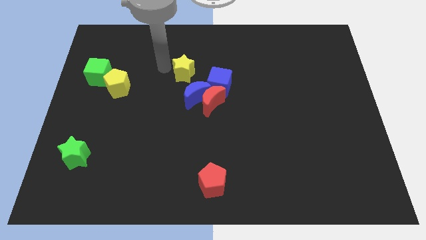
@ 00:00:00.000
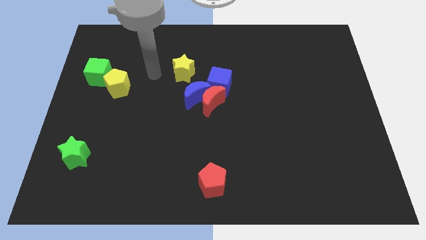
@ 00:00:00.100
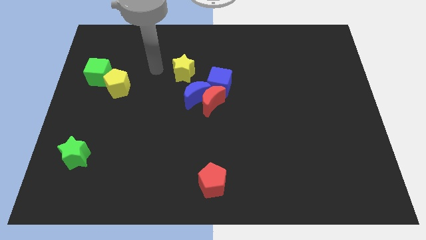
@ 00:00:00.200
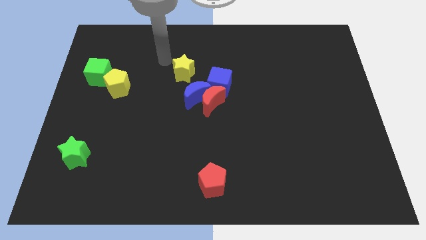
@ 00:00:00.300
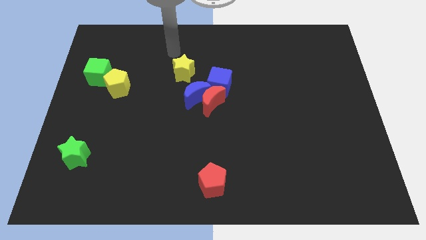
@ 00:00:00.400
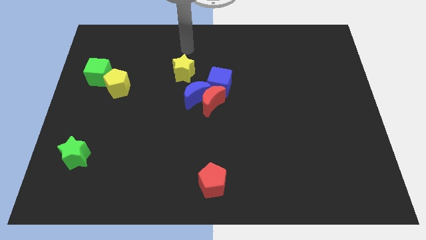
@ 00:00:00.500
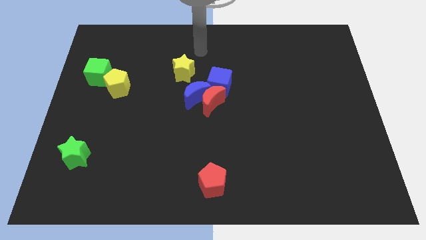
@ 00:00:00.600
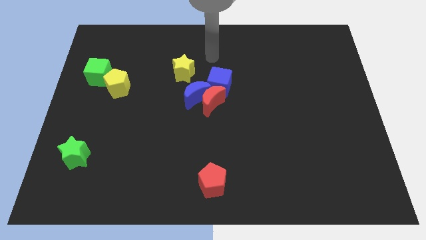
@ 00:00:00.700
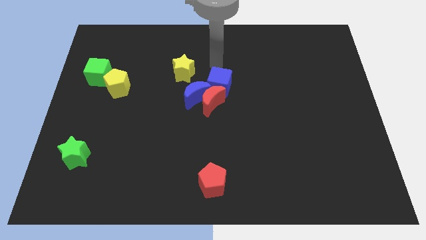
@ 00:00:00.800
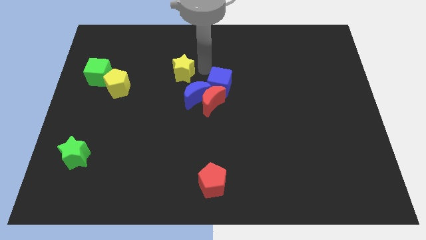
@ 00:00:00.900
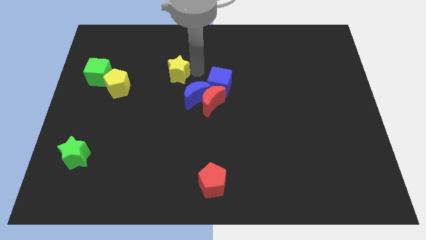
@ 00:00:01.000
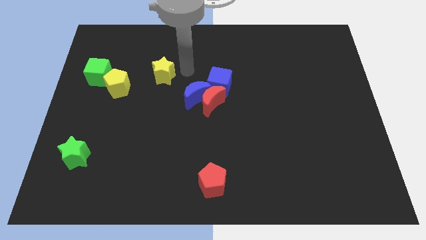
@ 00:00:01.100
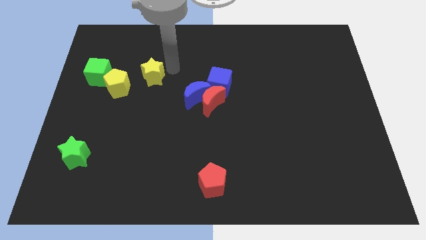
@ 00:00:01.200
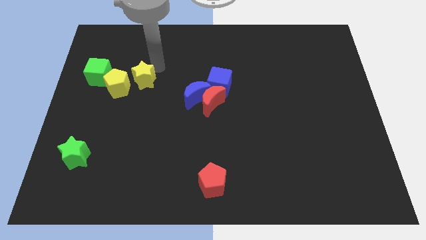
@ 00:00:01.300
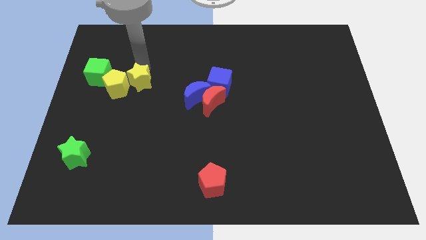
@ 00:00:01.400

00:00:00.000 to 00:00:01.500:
push yellow star into yellow pentagon

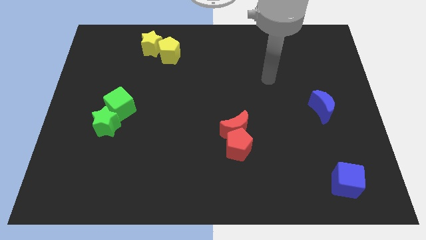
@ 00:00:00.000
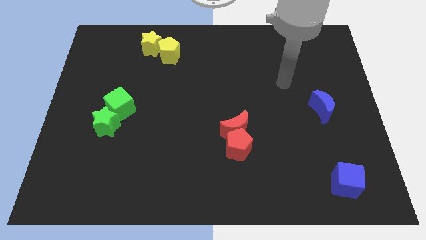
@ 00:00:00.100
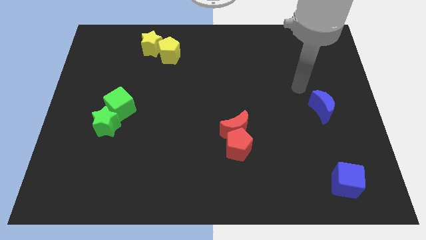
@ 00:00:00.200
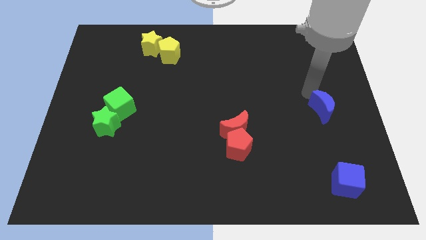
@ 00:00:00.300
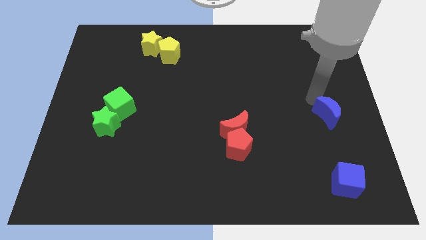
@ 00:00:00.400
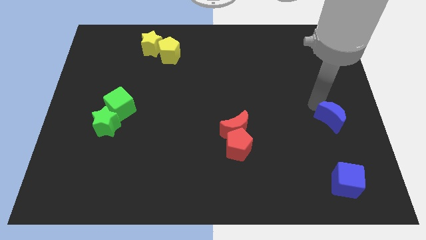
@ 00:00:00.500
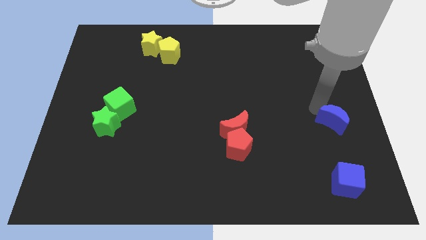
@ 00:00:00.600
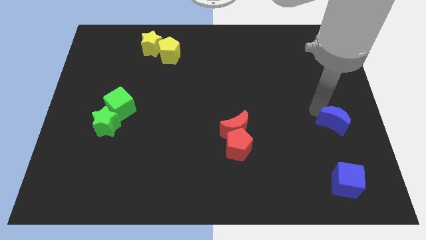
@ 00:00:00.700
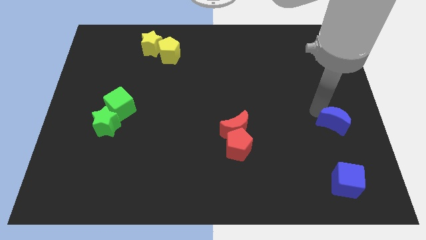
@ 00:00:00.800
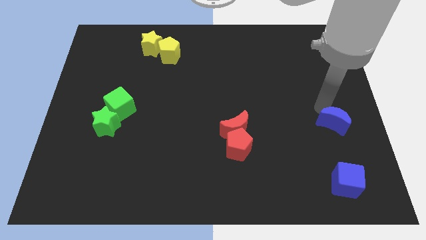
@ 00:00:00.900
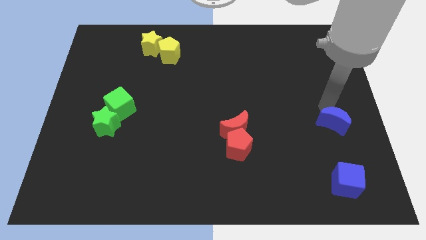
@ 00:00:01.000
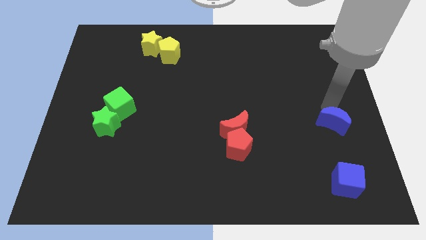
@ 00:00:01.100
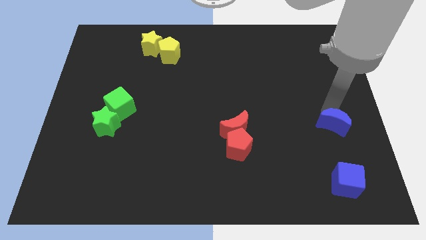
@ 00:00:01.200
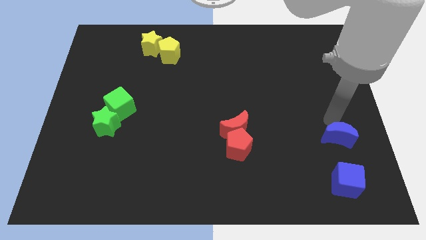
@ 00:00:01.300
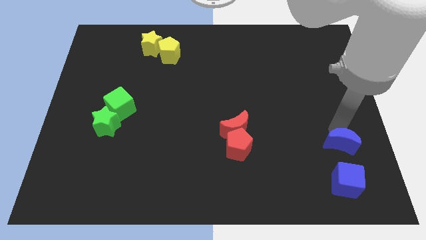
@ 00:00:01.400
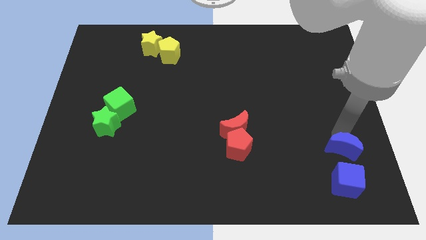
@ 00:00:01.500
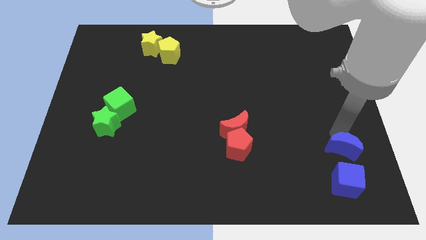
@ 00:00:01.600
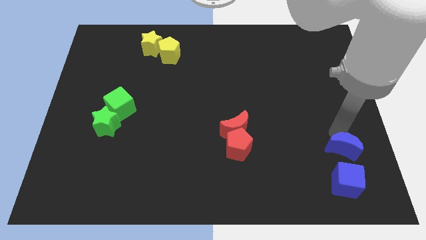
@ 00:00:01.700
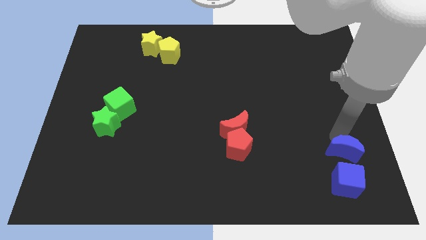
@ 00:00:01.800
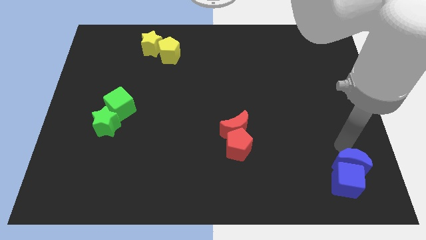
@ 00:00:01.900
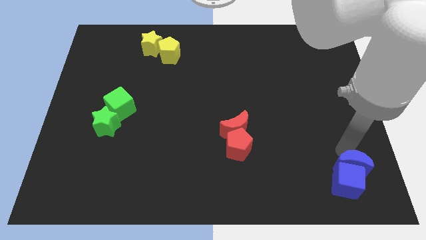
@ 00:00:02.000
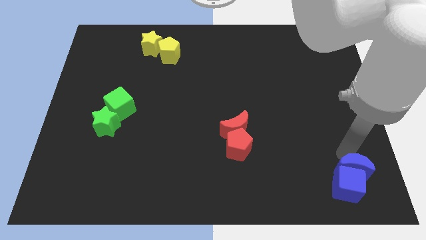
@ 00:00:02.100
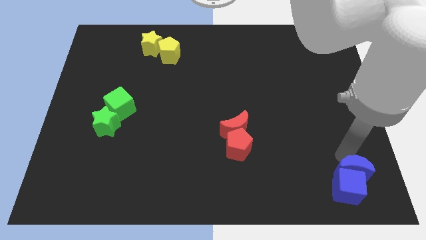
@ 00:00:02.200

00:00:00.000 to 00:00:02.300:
place the blue crescent above the blue cube

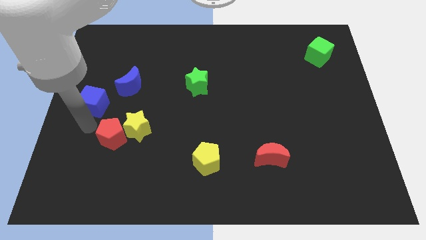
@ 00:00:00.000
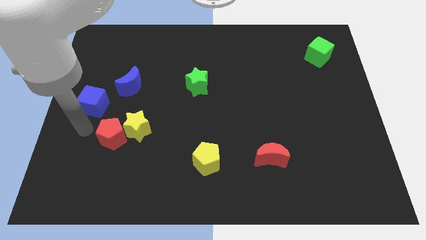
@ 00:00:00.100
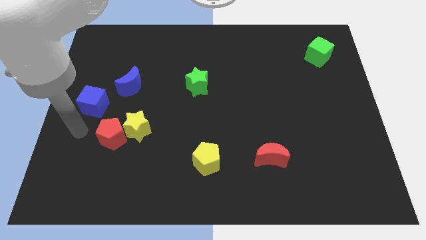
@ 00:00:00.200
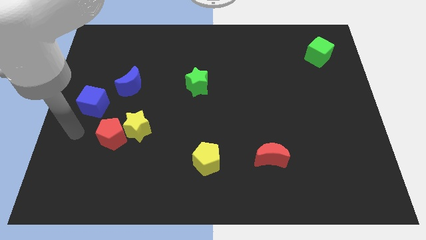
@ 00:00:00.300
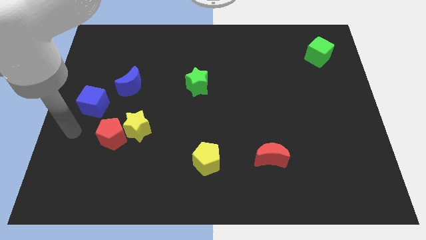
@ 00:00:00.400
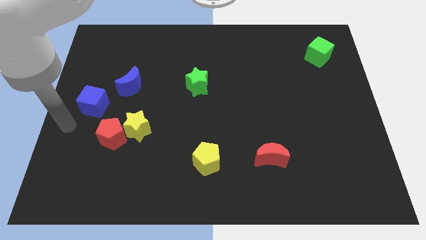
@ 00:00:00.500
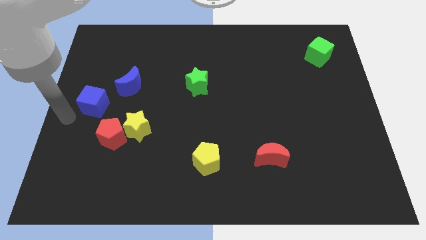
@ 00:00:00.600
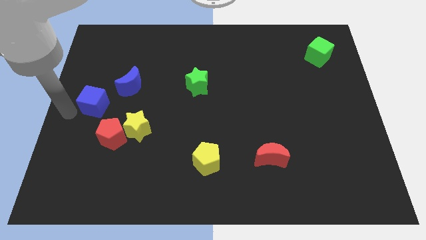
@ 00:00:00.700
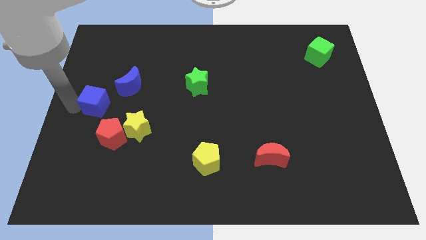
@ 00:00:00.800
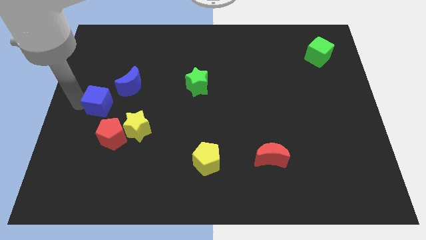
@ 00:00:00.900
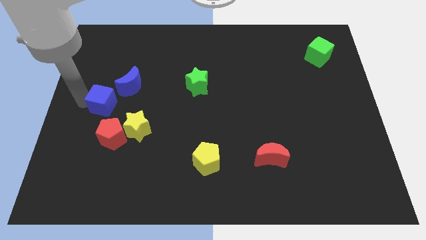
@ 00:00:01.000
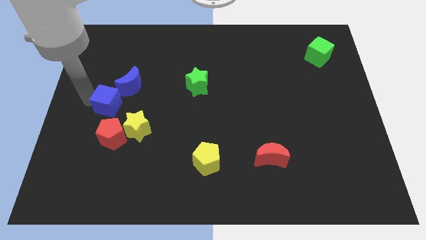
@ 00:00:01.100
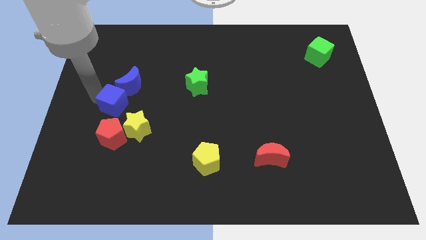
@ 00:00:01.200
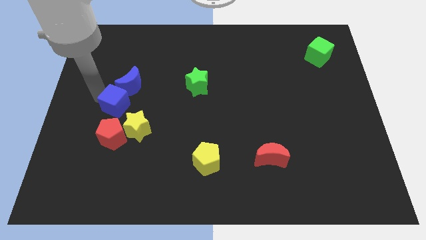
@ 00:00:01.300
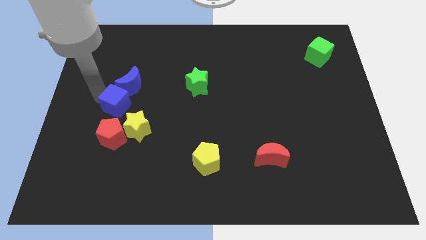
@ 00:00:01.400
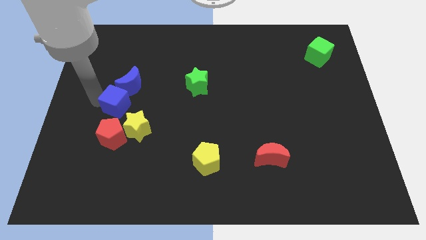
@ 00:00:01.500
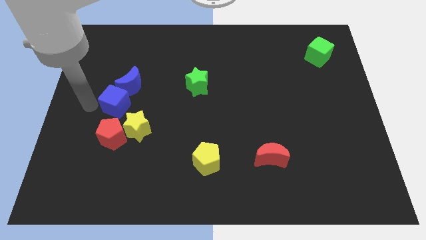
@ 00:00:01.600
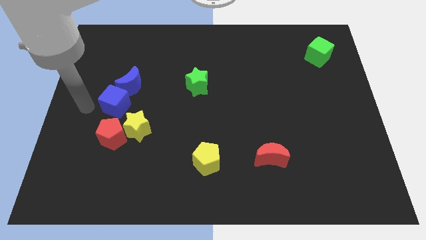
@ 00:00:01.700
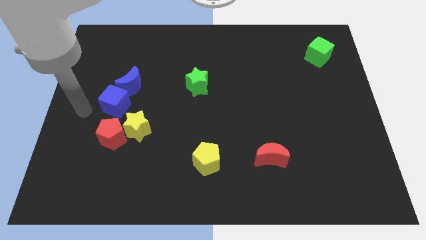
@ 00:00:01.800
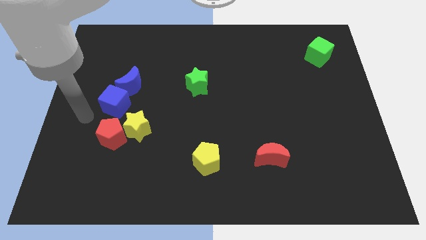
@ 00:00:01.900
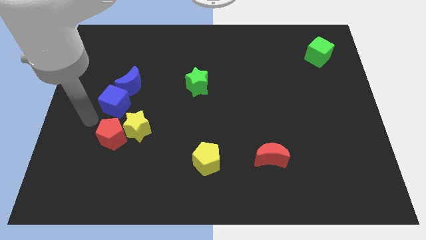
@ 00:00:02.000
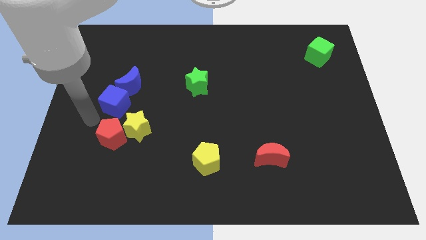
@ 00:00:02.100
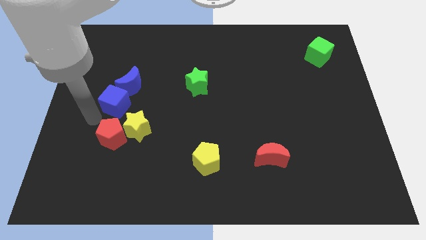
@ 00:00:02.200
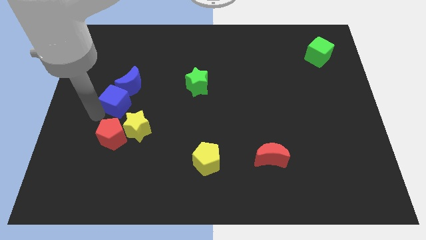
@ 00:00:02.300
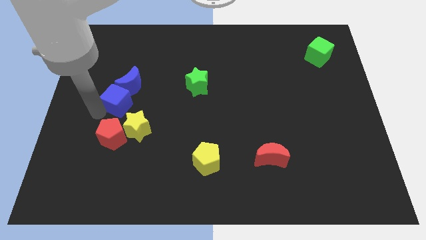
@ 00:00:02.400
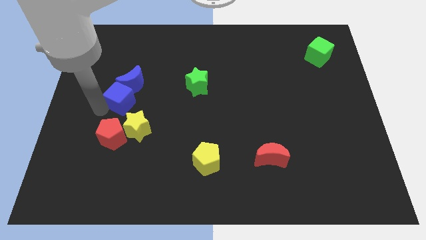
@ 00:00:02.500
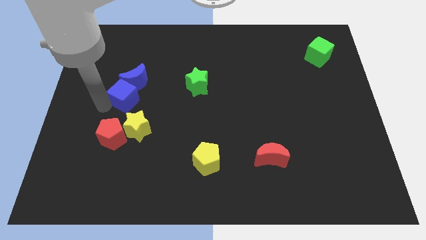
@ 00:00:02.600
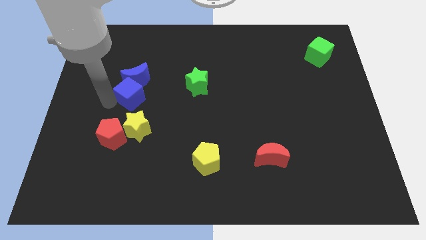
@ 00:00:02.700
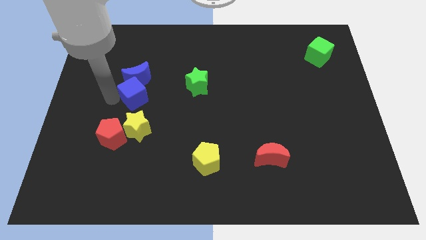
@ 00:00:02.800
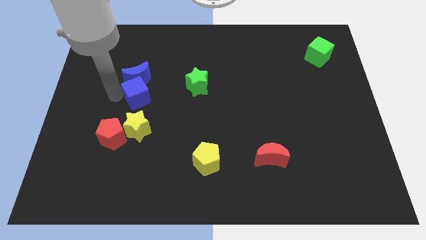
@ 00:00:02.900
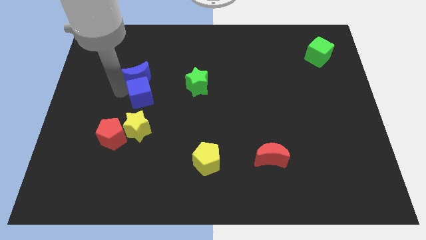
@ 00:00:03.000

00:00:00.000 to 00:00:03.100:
put the blue cube and blue moon together at the left side of the green star

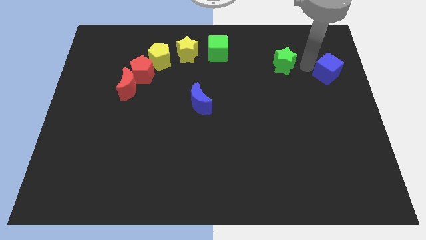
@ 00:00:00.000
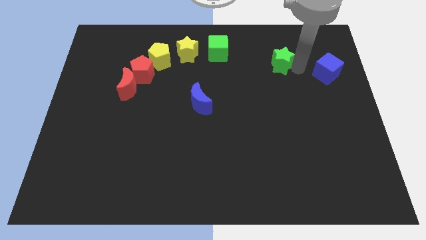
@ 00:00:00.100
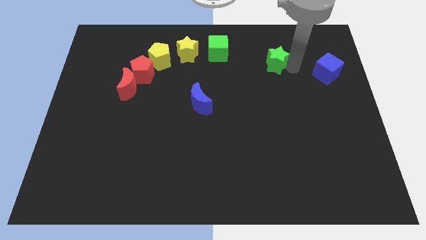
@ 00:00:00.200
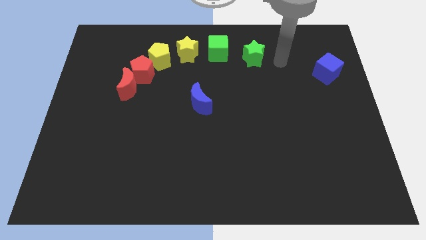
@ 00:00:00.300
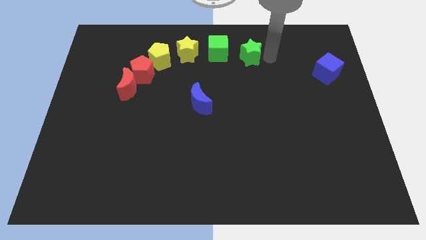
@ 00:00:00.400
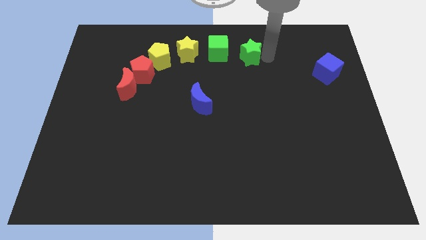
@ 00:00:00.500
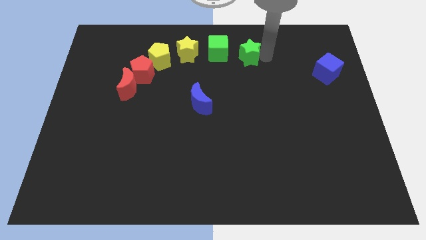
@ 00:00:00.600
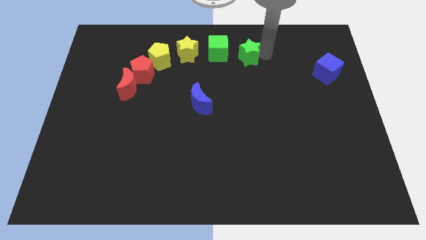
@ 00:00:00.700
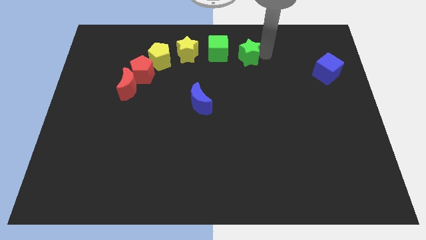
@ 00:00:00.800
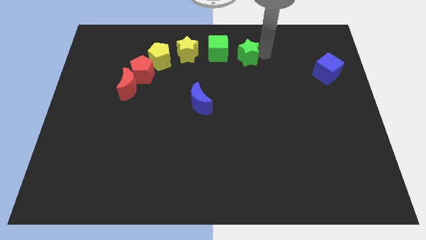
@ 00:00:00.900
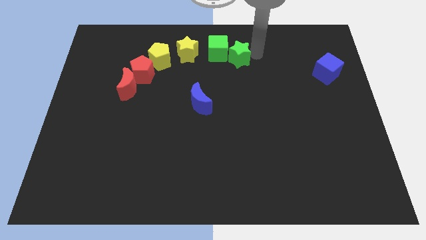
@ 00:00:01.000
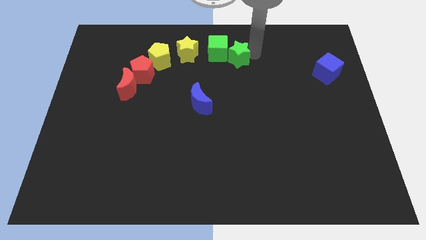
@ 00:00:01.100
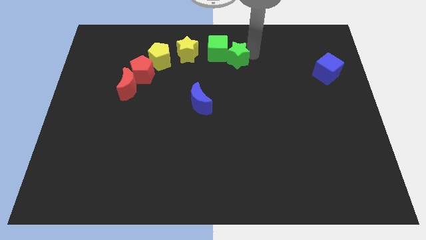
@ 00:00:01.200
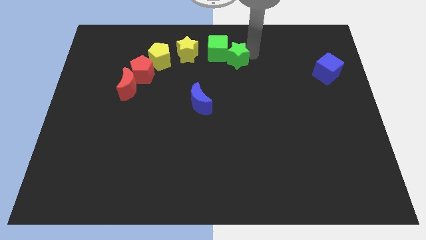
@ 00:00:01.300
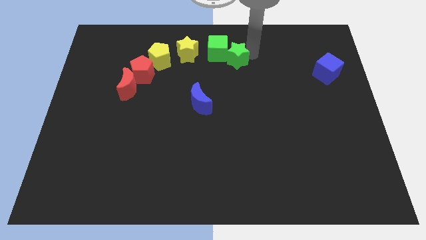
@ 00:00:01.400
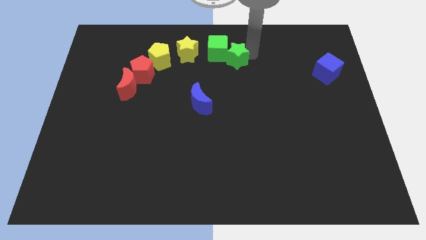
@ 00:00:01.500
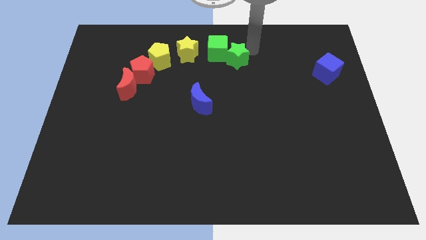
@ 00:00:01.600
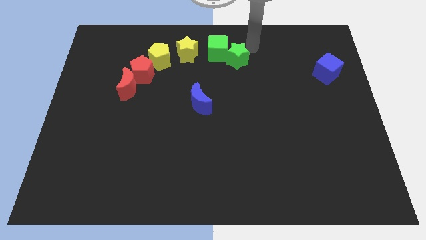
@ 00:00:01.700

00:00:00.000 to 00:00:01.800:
place the green star to the bottom right of the green cube

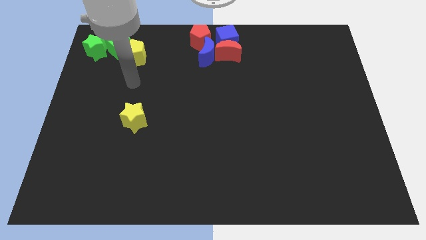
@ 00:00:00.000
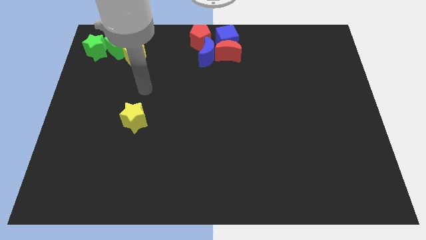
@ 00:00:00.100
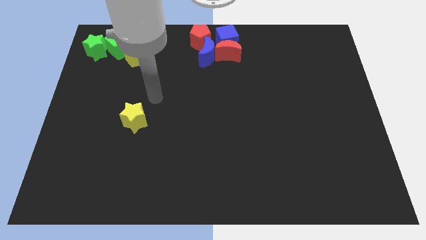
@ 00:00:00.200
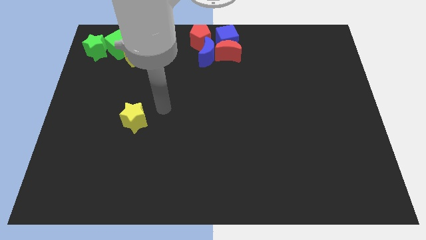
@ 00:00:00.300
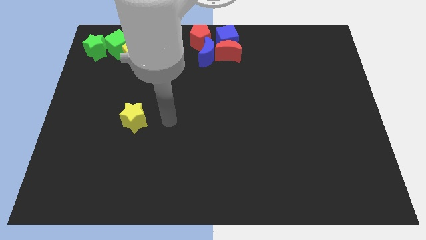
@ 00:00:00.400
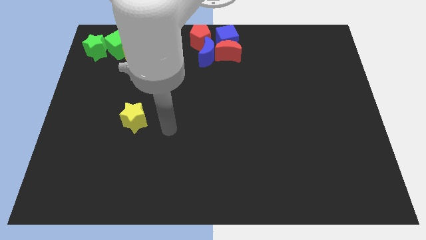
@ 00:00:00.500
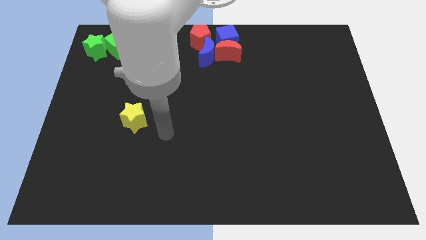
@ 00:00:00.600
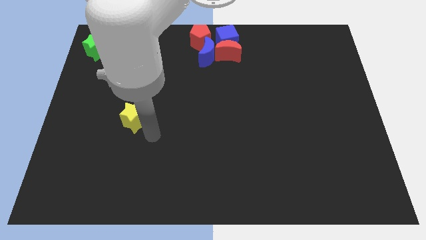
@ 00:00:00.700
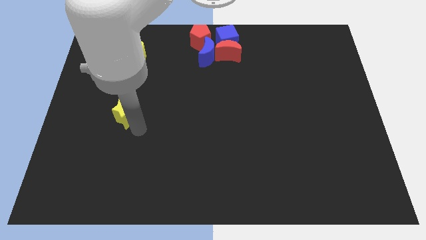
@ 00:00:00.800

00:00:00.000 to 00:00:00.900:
place the arm near the yellow star
